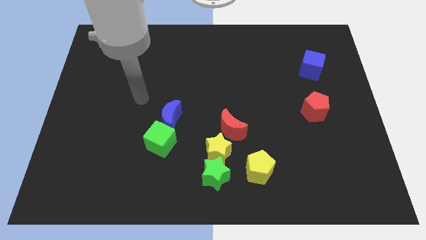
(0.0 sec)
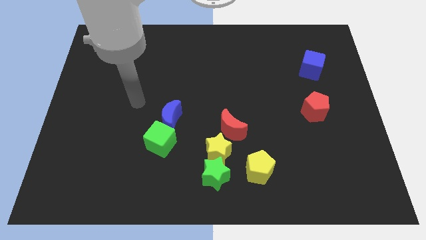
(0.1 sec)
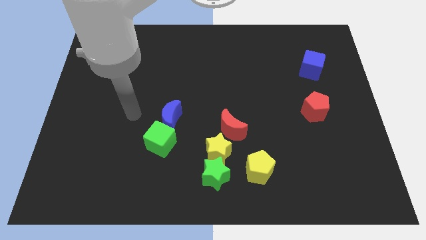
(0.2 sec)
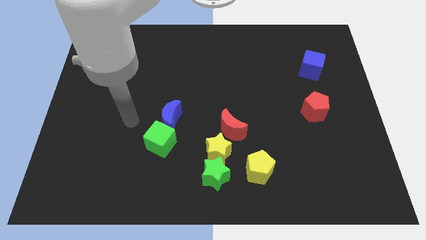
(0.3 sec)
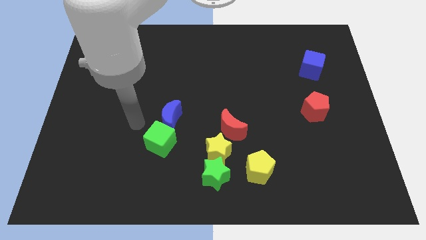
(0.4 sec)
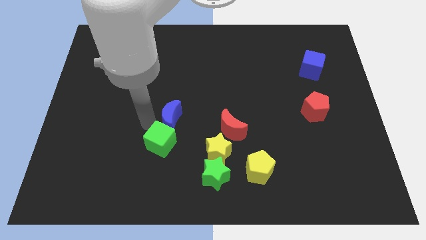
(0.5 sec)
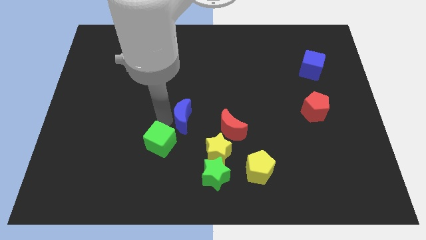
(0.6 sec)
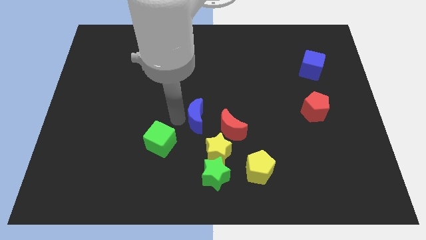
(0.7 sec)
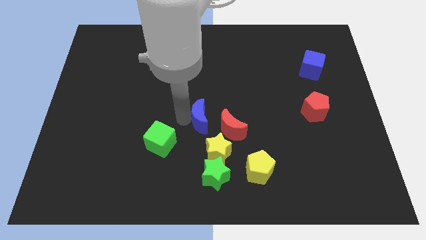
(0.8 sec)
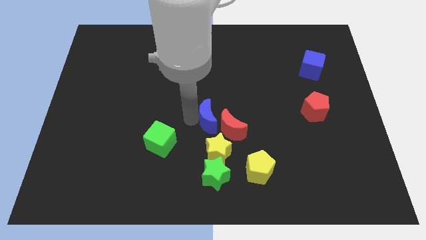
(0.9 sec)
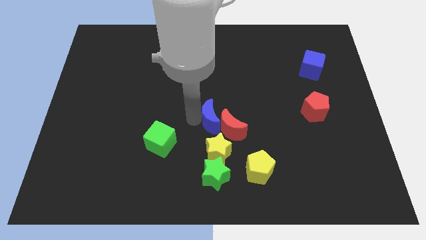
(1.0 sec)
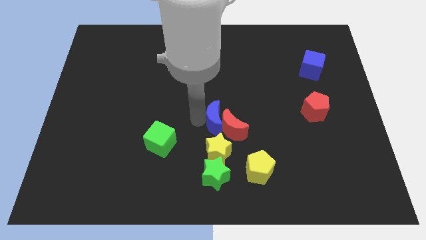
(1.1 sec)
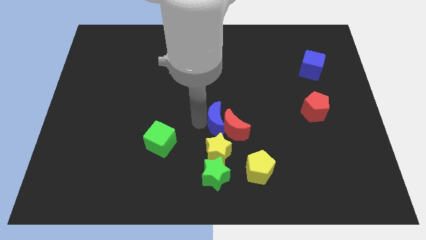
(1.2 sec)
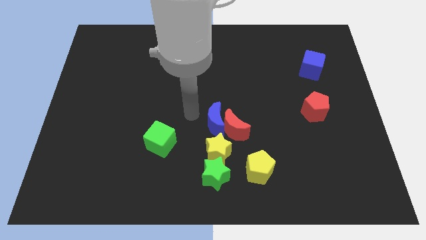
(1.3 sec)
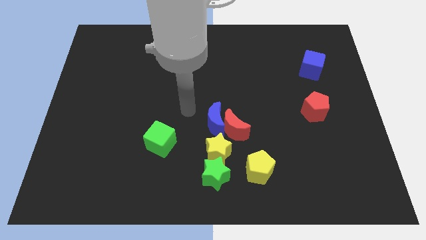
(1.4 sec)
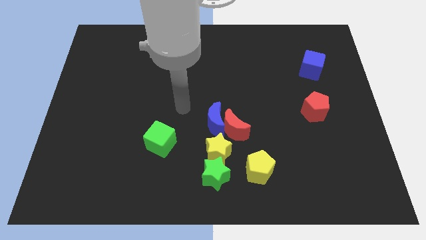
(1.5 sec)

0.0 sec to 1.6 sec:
push the blue crescent into the red crescent

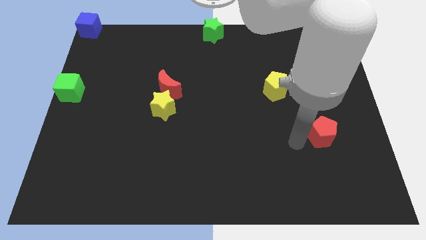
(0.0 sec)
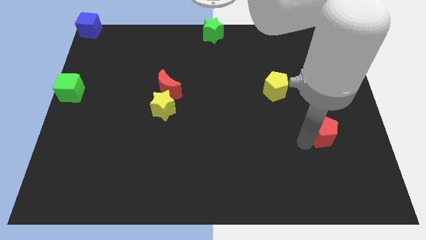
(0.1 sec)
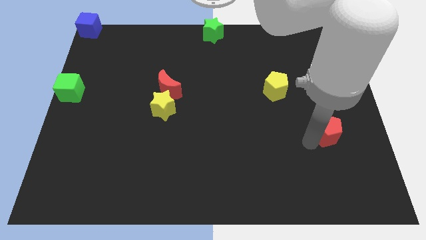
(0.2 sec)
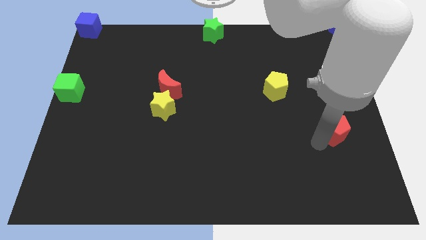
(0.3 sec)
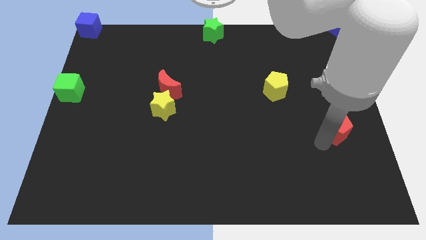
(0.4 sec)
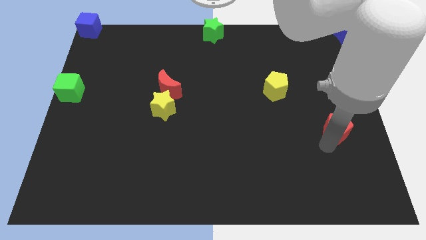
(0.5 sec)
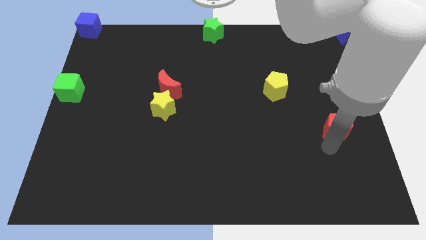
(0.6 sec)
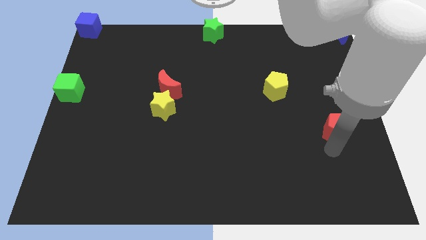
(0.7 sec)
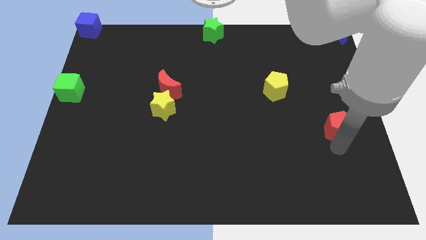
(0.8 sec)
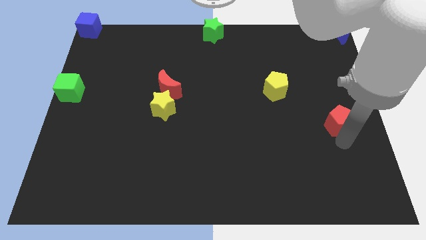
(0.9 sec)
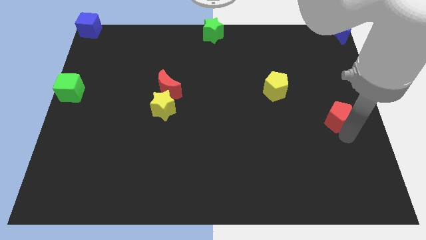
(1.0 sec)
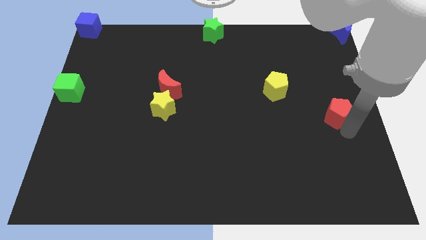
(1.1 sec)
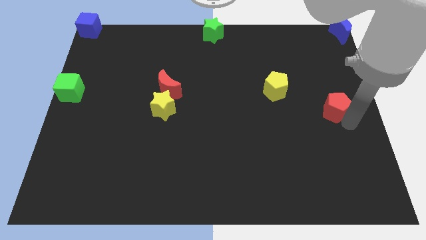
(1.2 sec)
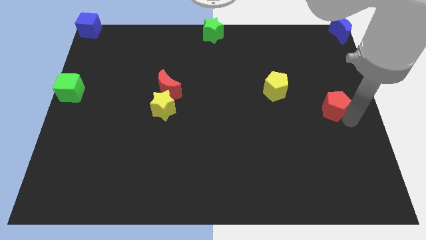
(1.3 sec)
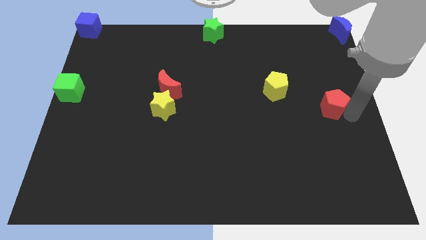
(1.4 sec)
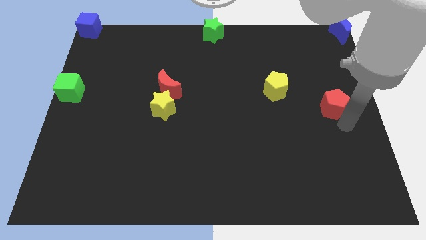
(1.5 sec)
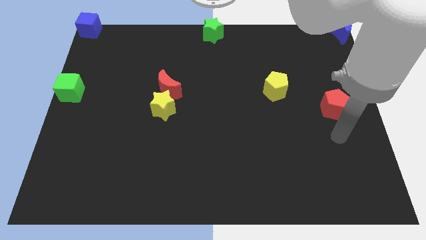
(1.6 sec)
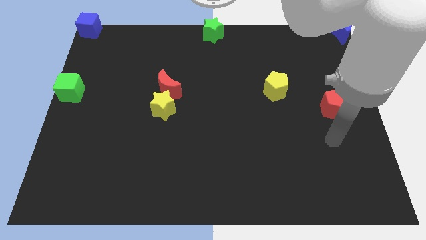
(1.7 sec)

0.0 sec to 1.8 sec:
push the red pentagon to the top of the board

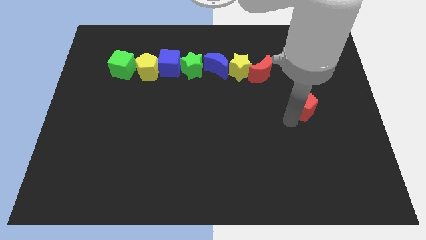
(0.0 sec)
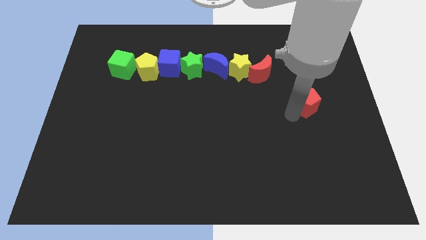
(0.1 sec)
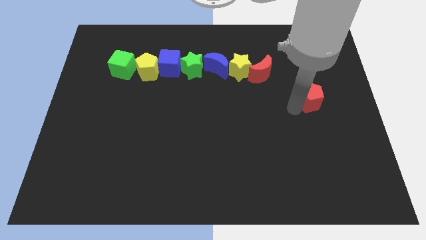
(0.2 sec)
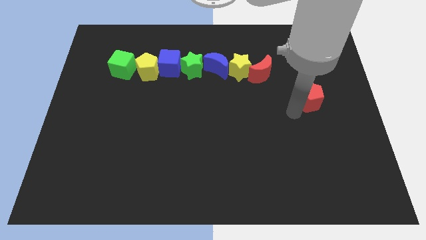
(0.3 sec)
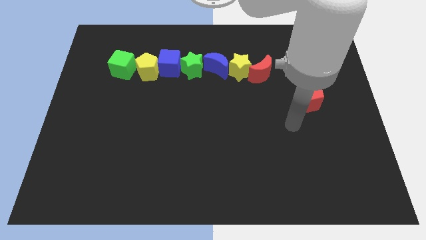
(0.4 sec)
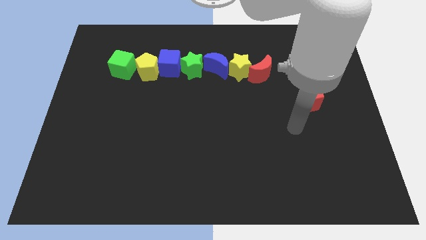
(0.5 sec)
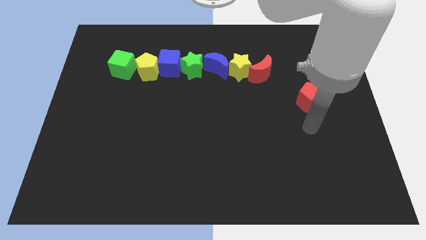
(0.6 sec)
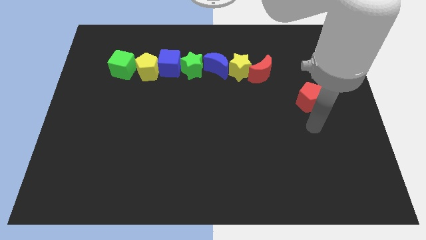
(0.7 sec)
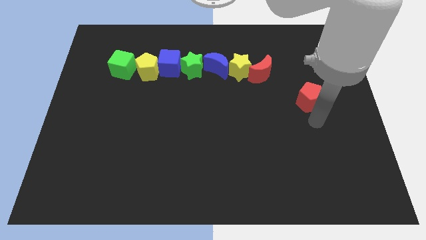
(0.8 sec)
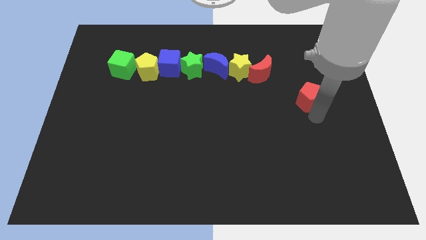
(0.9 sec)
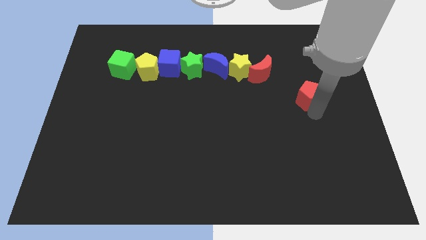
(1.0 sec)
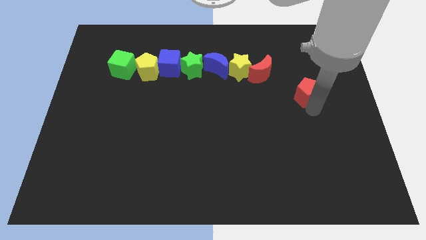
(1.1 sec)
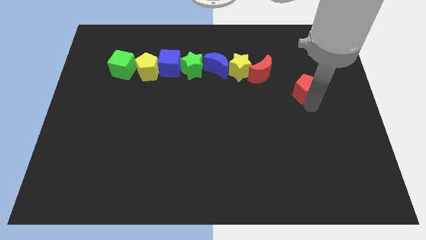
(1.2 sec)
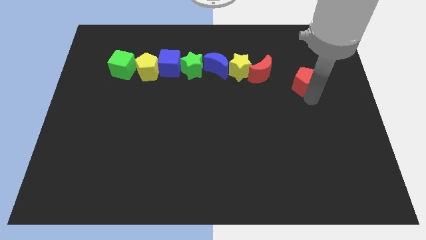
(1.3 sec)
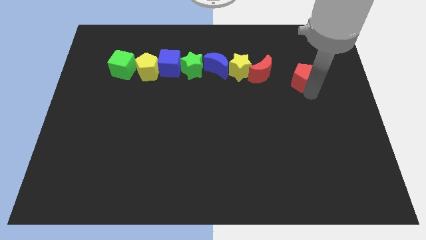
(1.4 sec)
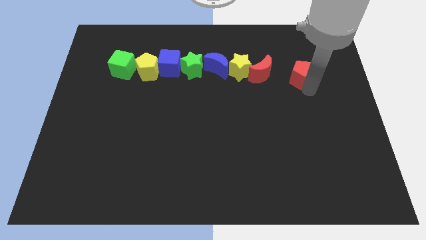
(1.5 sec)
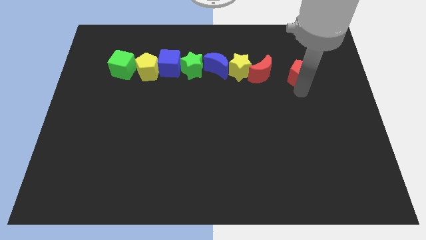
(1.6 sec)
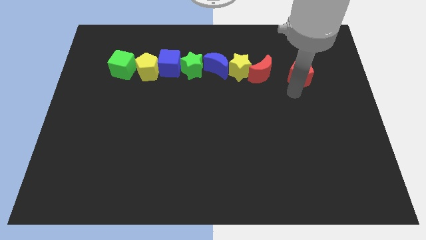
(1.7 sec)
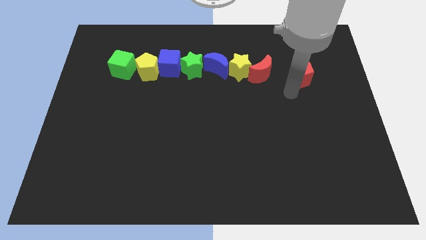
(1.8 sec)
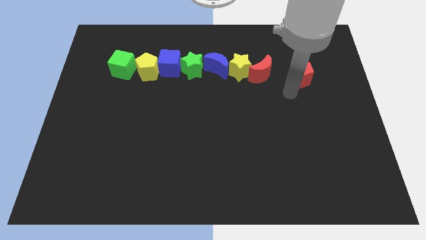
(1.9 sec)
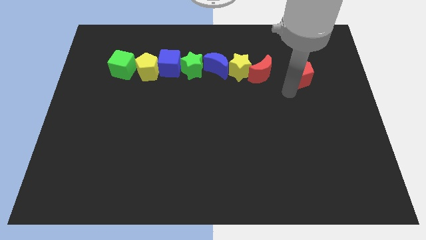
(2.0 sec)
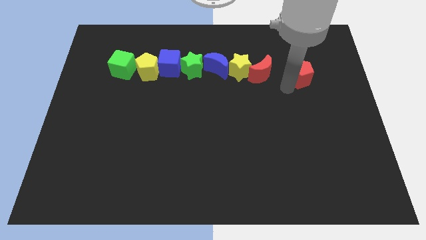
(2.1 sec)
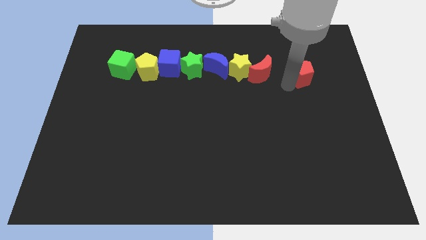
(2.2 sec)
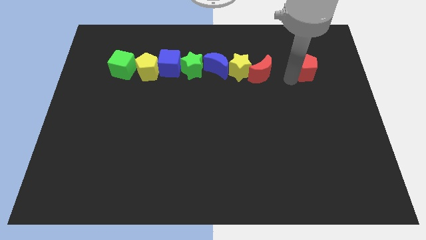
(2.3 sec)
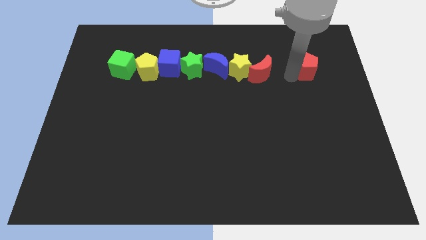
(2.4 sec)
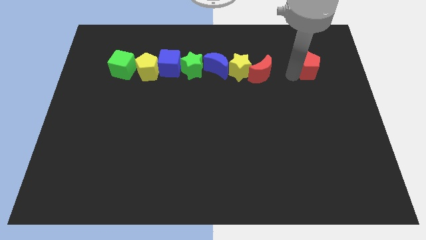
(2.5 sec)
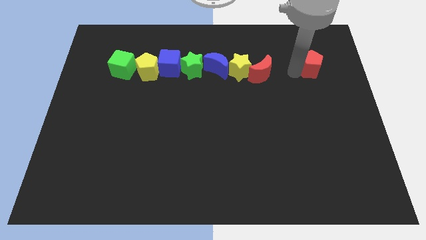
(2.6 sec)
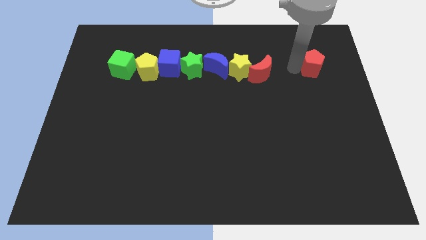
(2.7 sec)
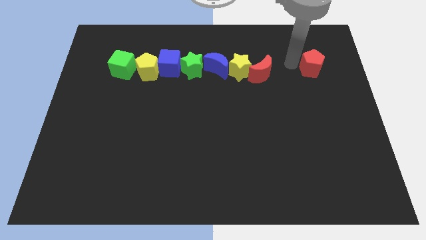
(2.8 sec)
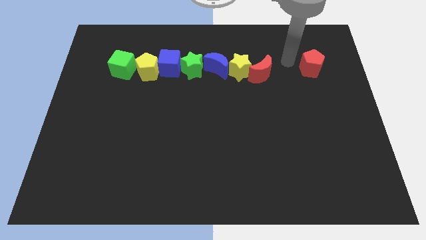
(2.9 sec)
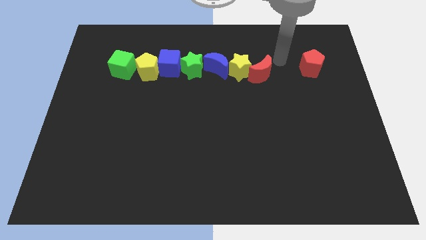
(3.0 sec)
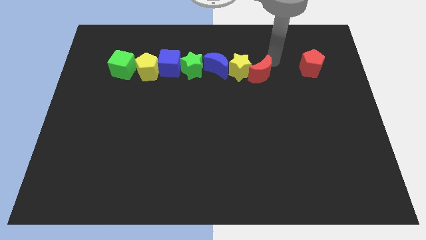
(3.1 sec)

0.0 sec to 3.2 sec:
place the red pentagon parallel right to the group of blocks

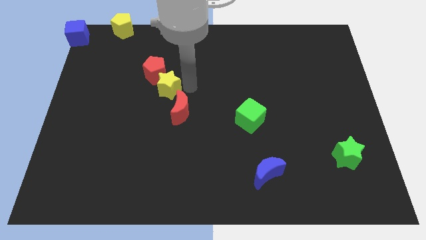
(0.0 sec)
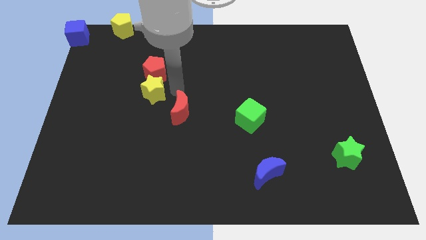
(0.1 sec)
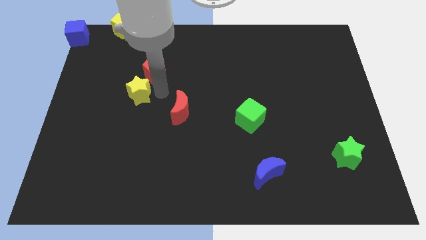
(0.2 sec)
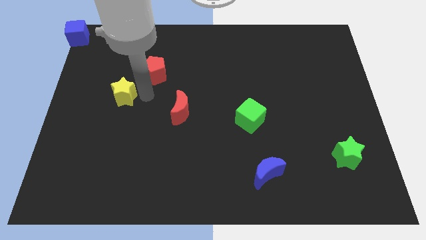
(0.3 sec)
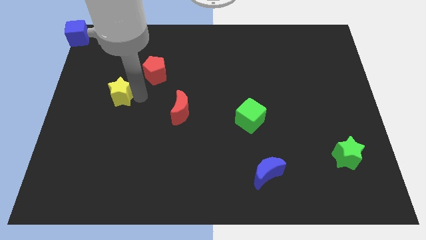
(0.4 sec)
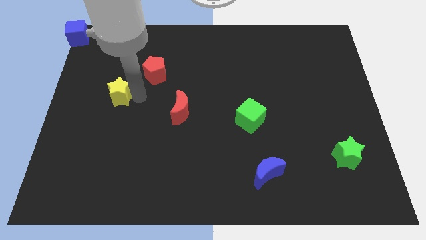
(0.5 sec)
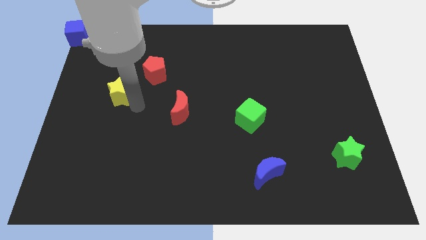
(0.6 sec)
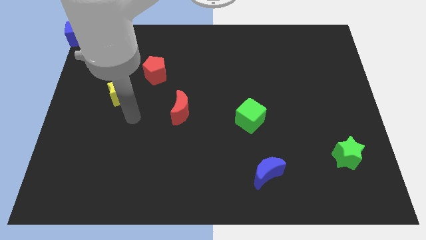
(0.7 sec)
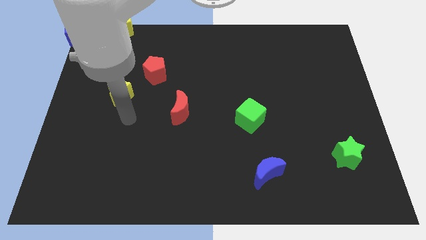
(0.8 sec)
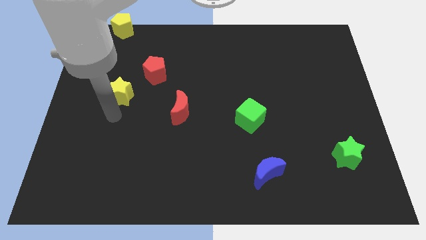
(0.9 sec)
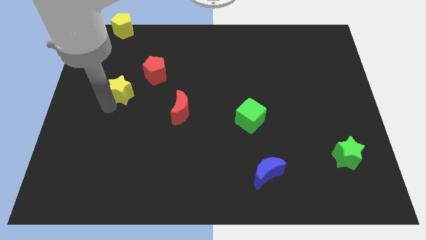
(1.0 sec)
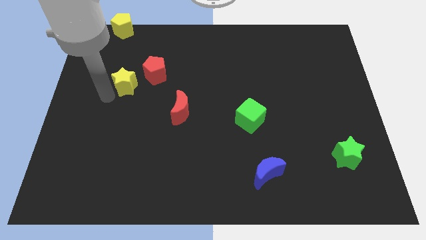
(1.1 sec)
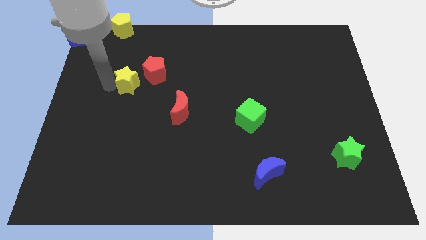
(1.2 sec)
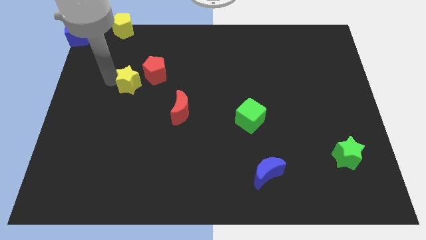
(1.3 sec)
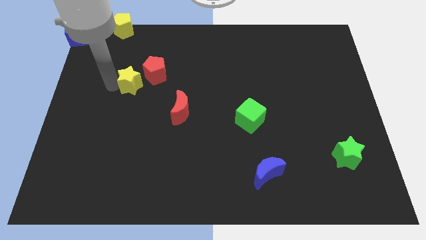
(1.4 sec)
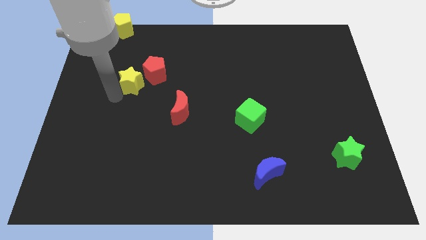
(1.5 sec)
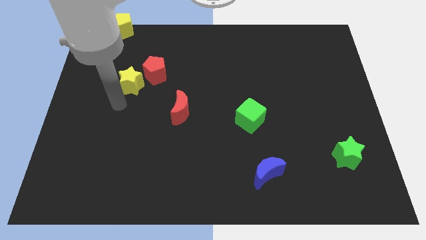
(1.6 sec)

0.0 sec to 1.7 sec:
place yellow star beside red pentagon

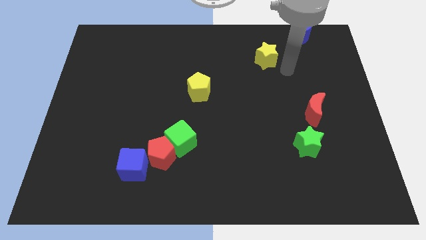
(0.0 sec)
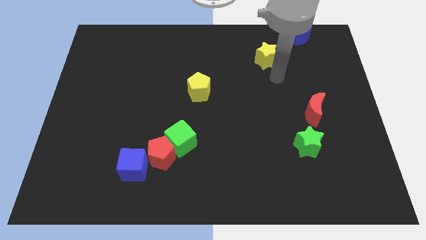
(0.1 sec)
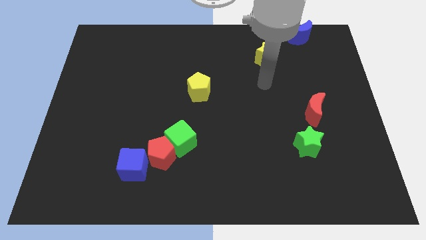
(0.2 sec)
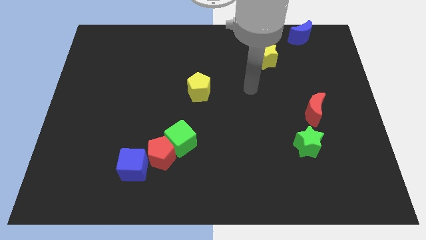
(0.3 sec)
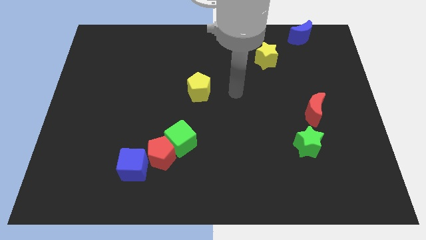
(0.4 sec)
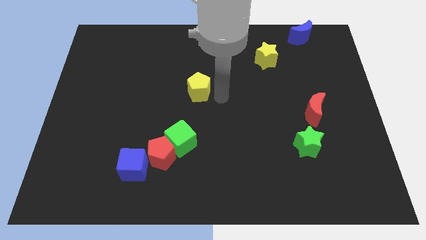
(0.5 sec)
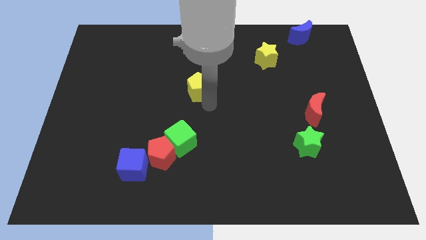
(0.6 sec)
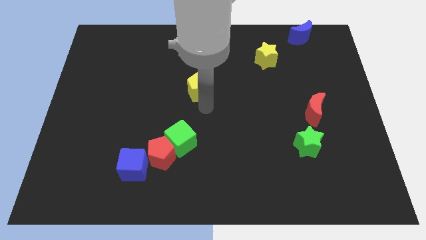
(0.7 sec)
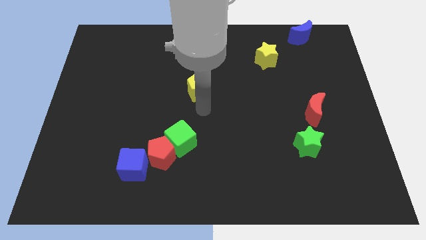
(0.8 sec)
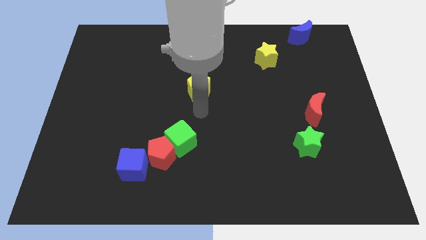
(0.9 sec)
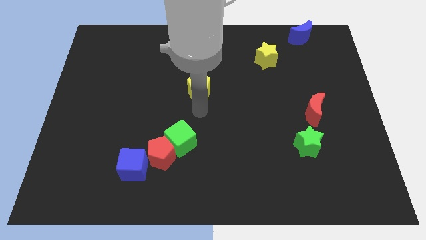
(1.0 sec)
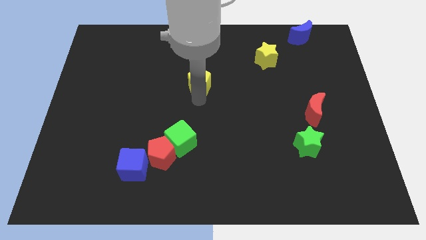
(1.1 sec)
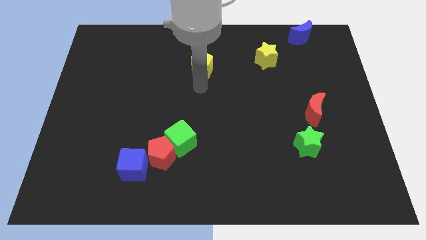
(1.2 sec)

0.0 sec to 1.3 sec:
push the yellow pentagon towards the top of the board
